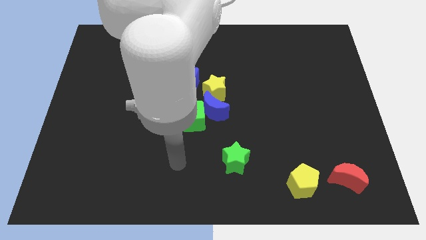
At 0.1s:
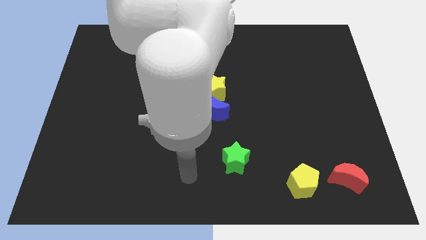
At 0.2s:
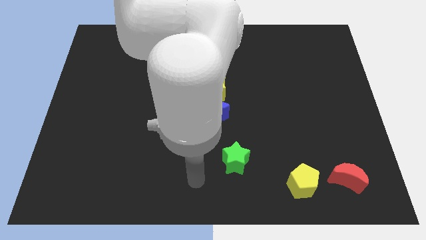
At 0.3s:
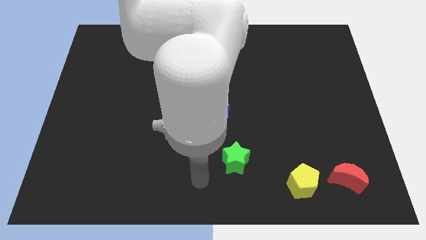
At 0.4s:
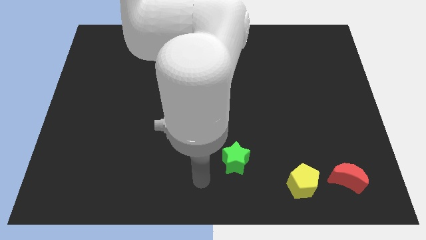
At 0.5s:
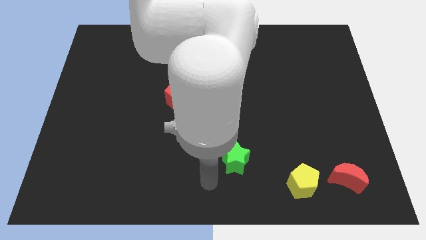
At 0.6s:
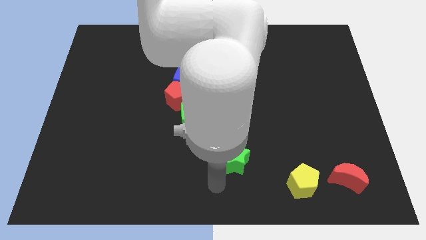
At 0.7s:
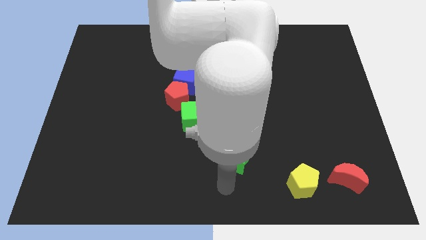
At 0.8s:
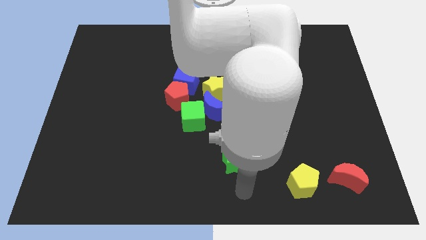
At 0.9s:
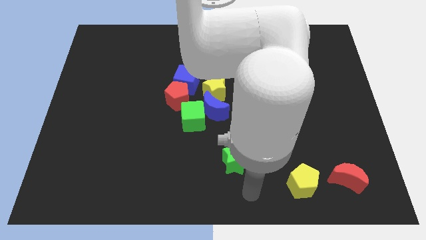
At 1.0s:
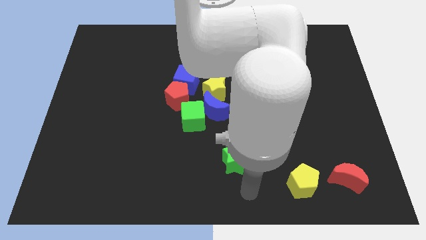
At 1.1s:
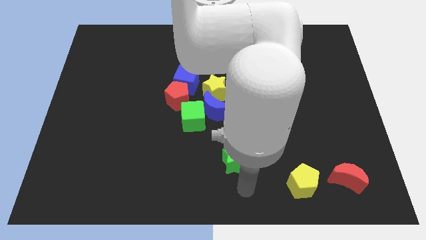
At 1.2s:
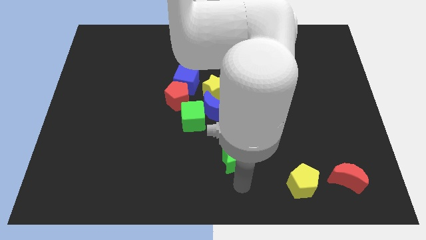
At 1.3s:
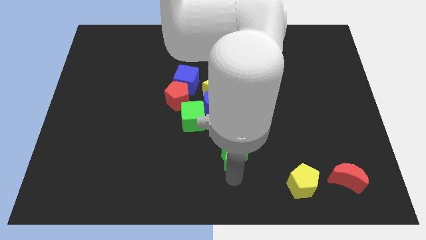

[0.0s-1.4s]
place the arm down to the green star

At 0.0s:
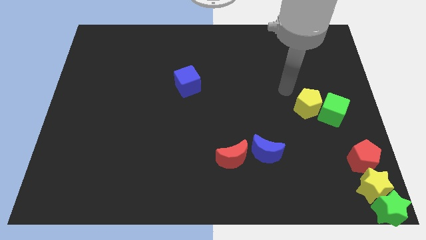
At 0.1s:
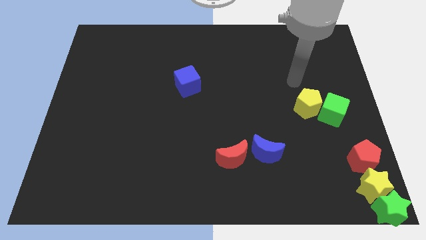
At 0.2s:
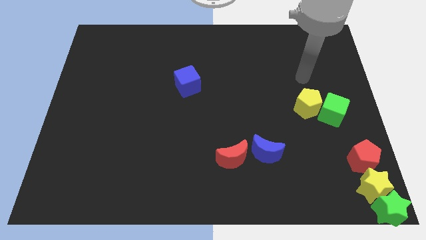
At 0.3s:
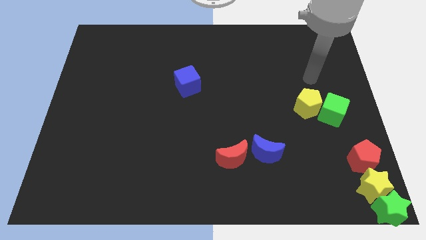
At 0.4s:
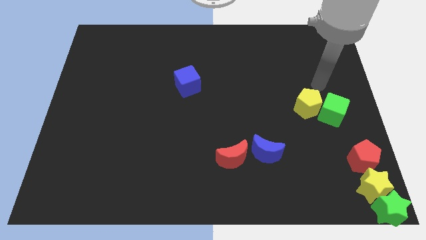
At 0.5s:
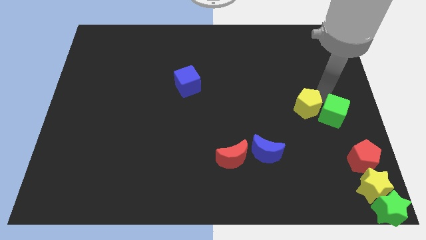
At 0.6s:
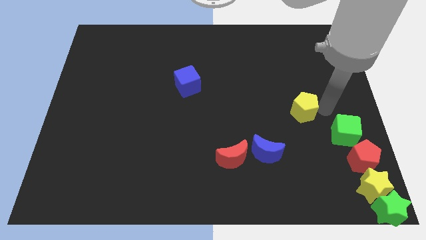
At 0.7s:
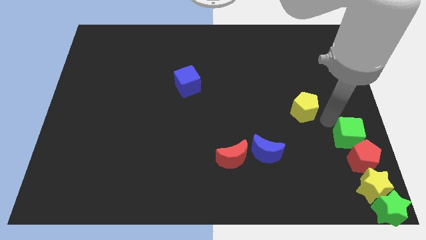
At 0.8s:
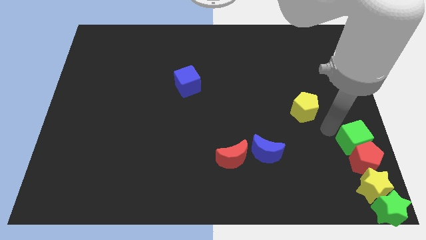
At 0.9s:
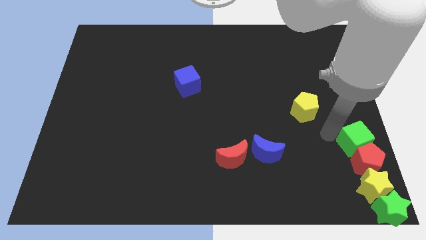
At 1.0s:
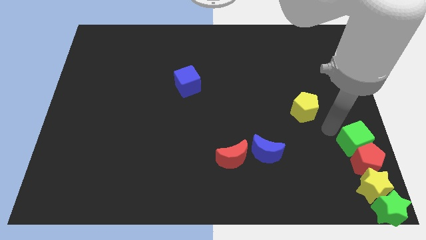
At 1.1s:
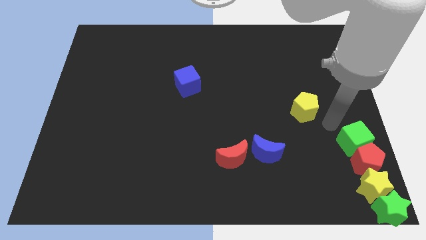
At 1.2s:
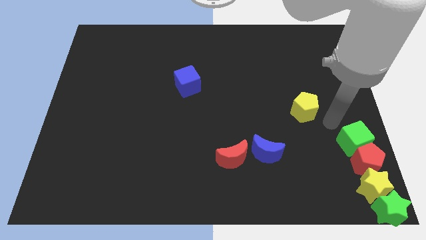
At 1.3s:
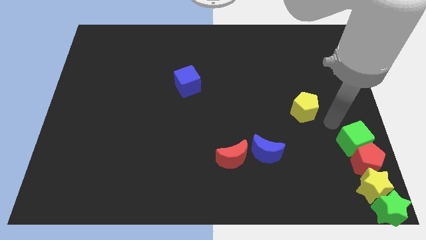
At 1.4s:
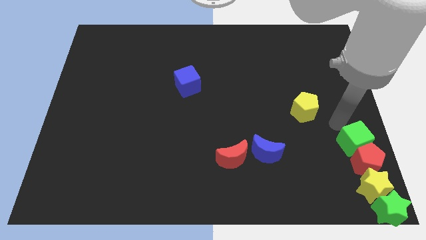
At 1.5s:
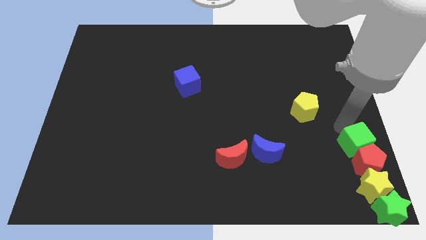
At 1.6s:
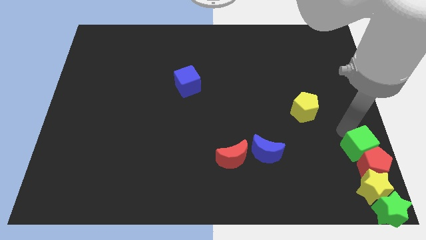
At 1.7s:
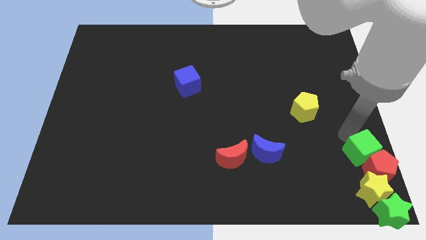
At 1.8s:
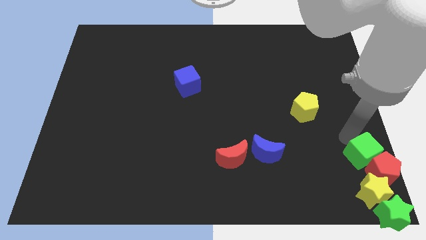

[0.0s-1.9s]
place the green cube diagonally to the red pentagon

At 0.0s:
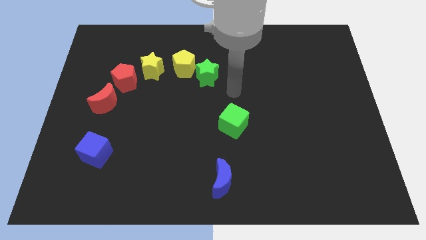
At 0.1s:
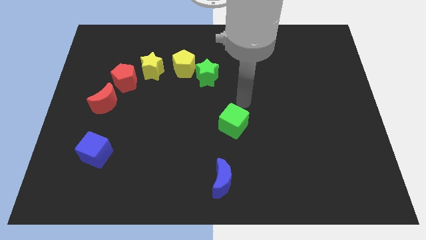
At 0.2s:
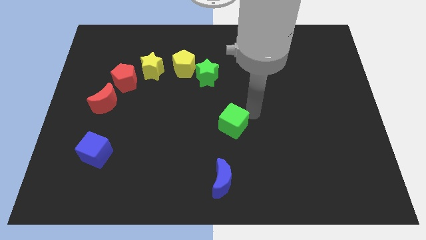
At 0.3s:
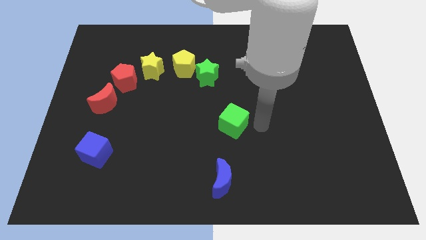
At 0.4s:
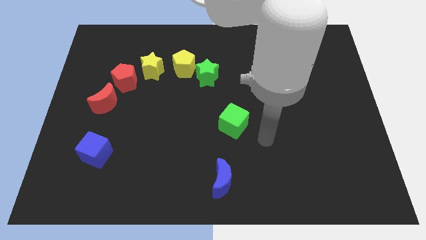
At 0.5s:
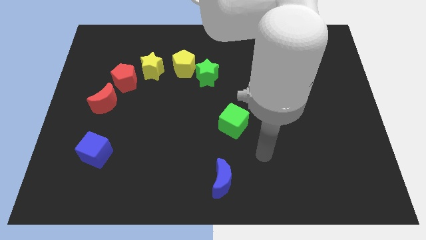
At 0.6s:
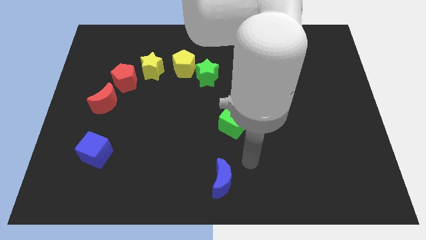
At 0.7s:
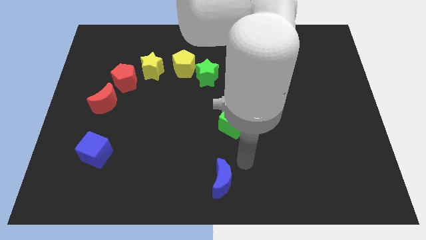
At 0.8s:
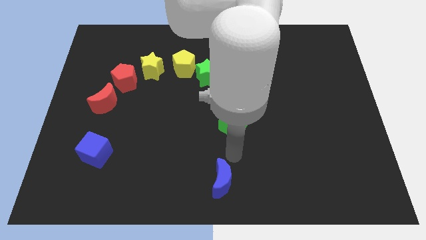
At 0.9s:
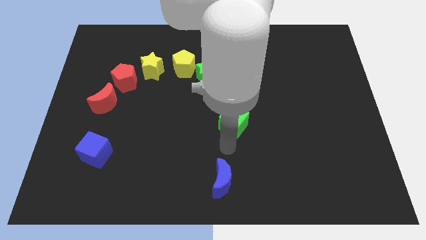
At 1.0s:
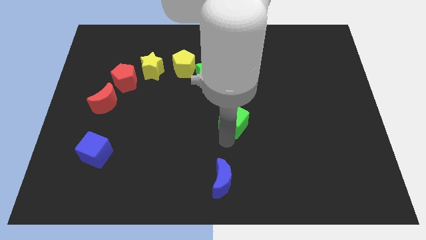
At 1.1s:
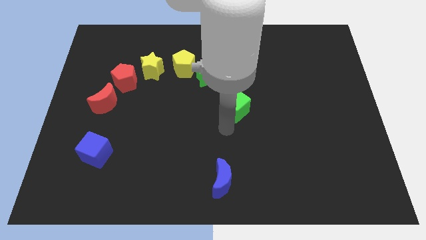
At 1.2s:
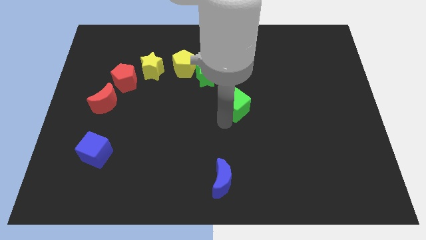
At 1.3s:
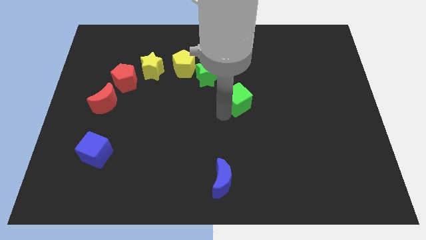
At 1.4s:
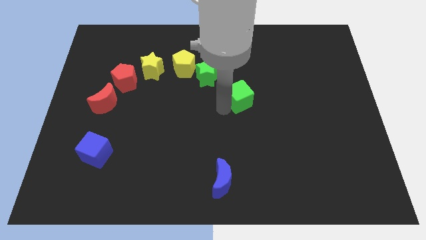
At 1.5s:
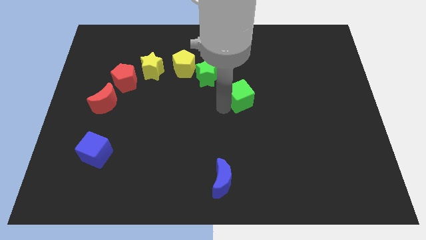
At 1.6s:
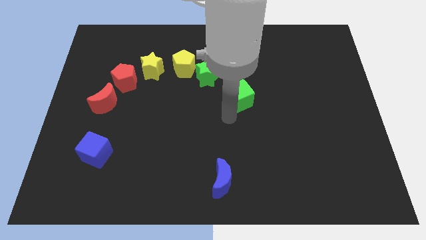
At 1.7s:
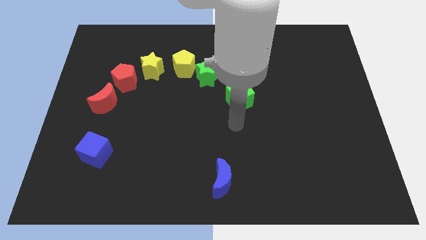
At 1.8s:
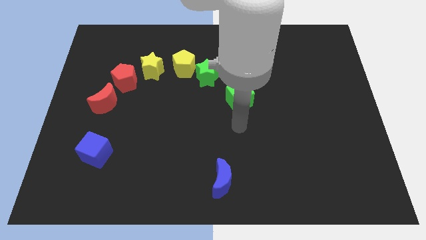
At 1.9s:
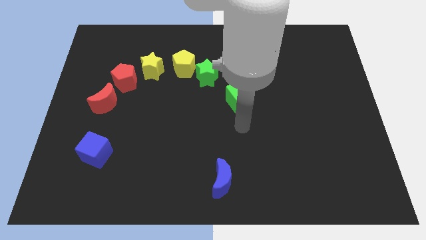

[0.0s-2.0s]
move green cube towards the green star

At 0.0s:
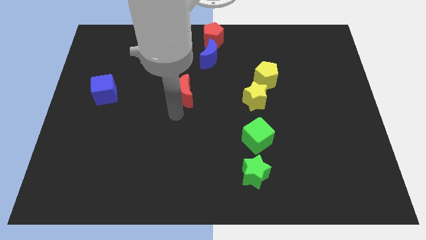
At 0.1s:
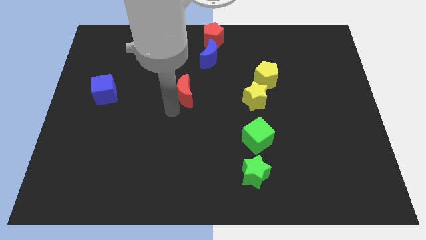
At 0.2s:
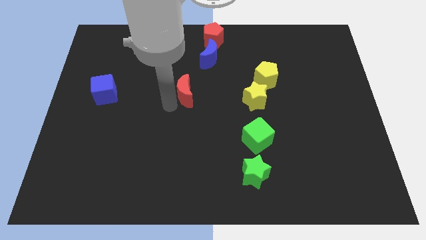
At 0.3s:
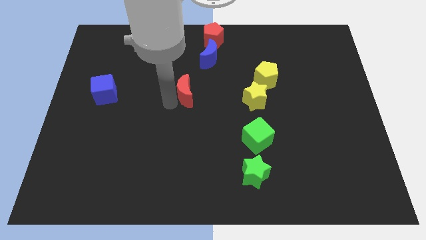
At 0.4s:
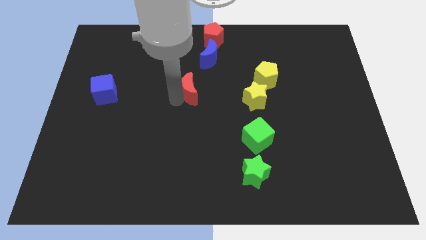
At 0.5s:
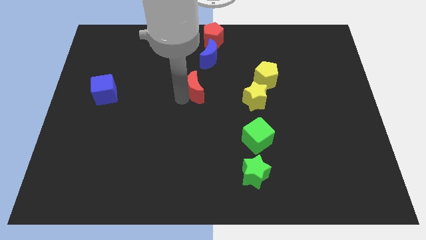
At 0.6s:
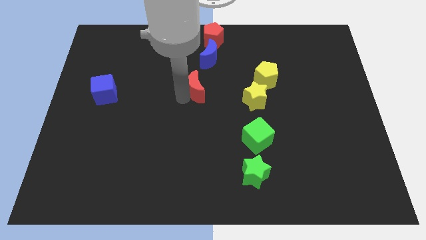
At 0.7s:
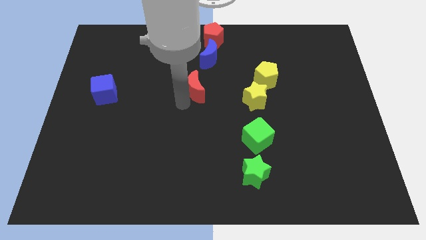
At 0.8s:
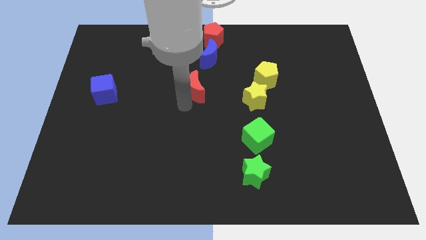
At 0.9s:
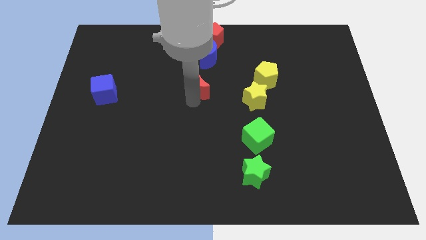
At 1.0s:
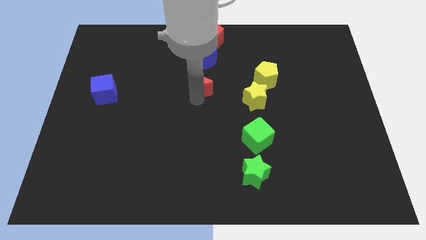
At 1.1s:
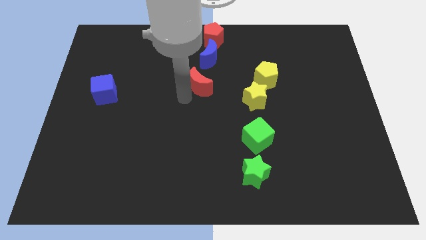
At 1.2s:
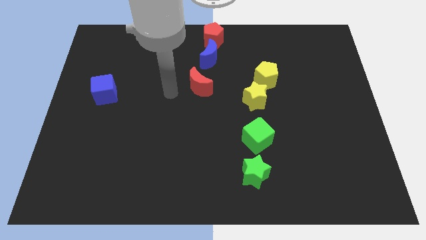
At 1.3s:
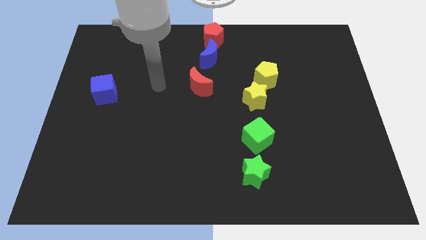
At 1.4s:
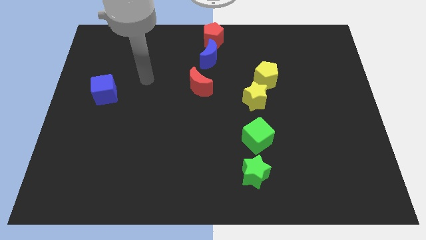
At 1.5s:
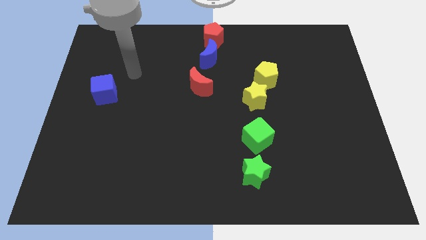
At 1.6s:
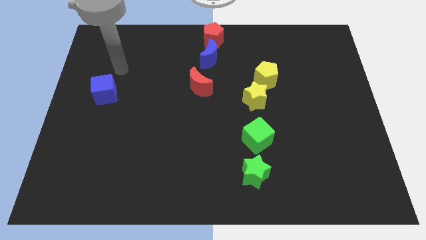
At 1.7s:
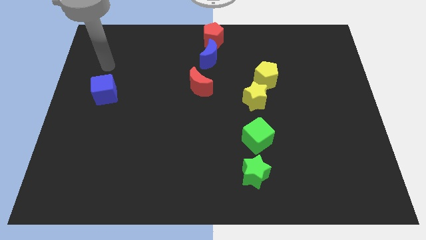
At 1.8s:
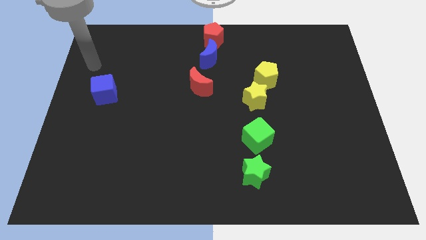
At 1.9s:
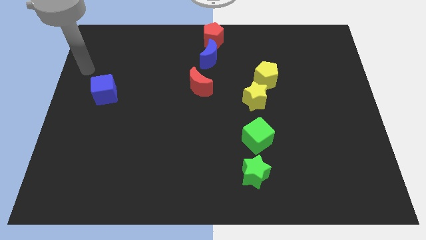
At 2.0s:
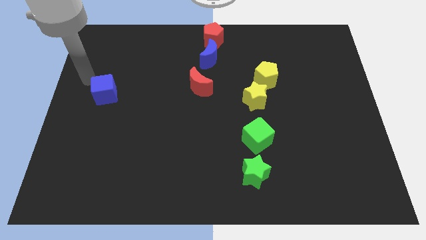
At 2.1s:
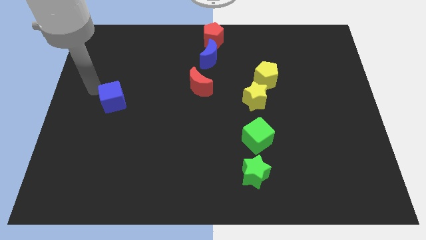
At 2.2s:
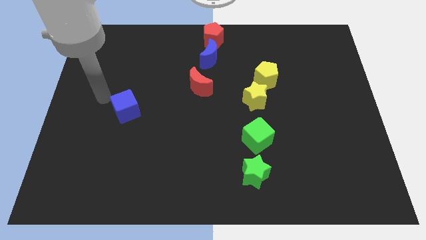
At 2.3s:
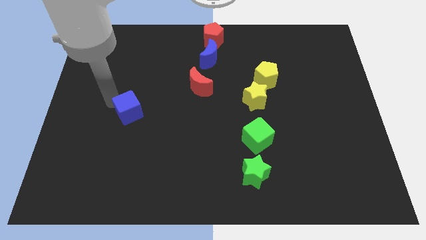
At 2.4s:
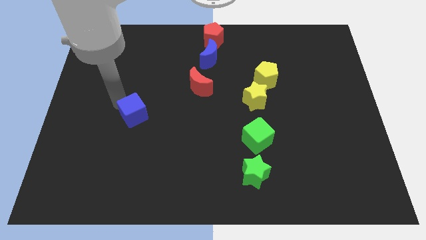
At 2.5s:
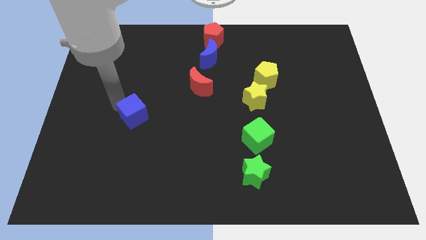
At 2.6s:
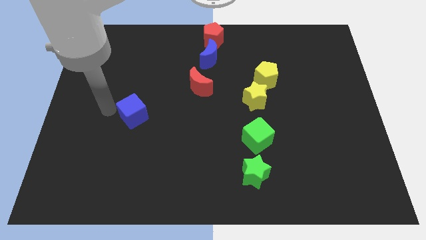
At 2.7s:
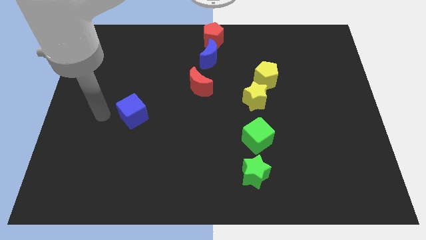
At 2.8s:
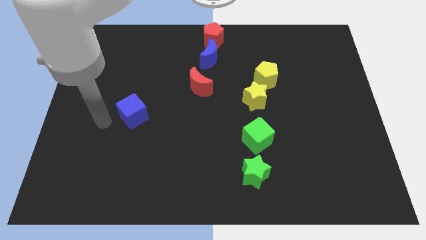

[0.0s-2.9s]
push the red crescent below the blue crescent

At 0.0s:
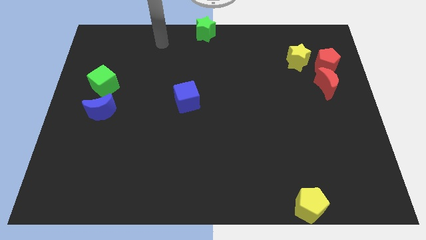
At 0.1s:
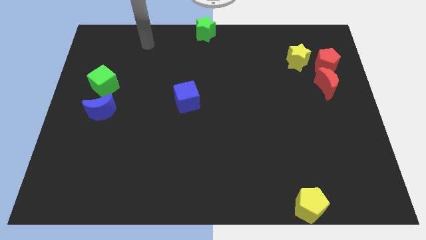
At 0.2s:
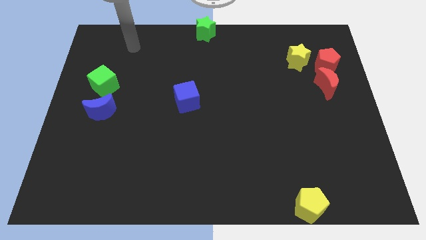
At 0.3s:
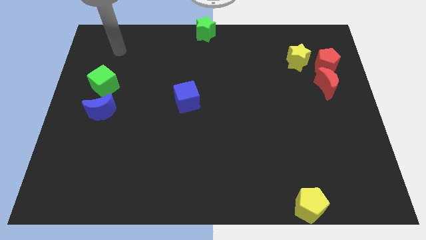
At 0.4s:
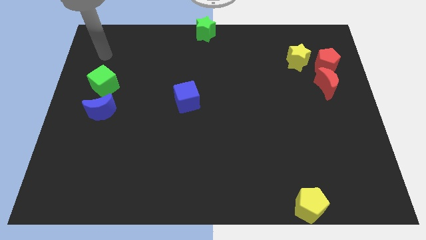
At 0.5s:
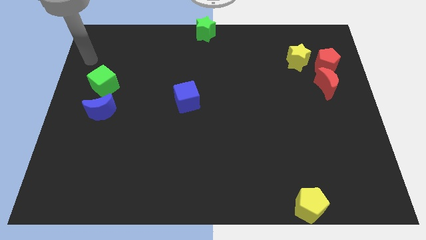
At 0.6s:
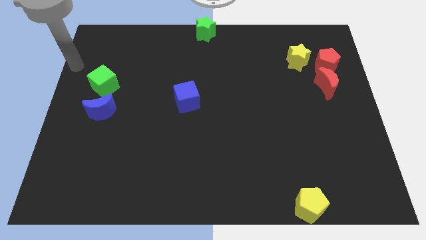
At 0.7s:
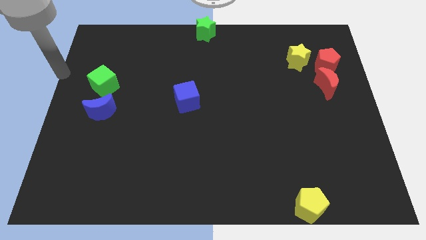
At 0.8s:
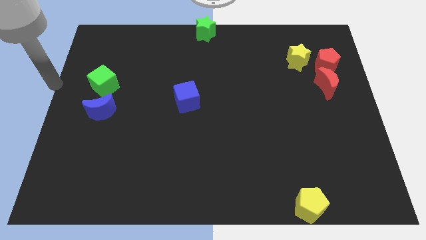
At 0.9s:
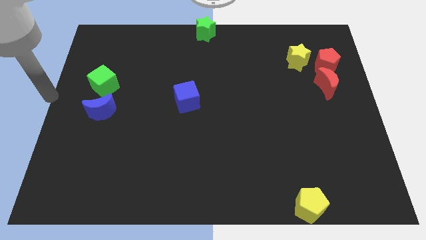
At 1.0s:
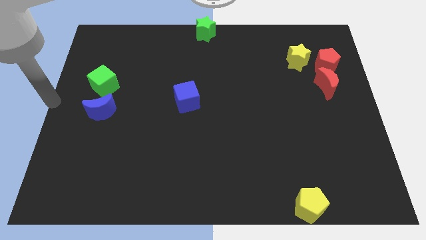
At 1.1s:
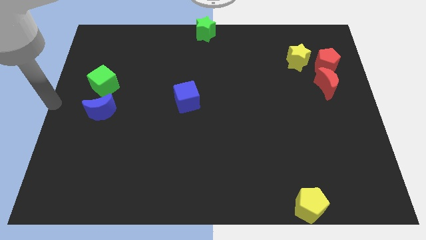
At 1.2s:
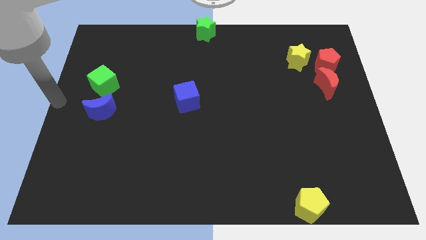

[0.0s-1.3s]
place your arm to the left center
